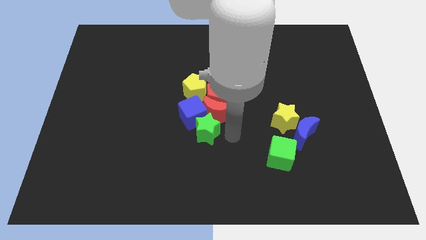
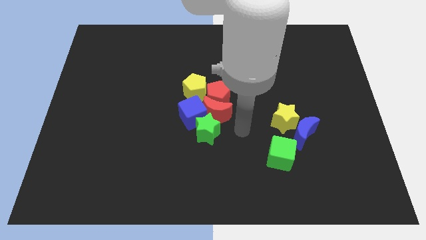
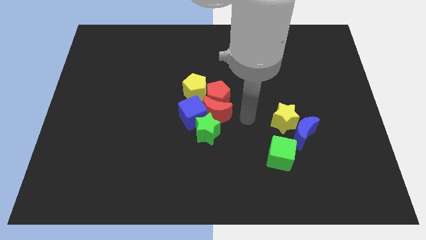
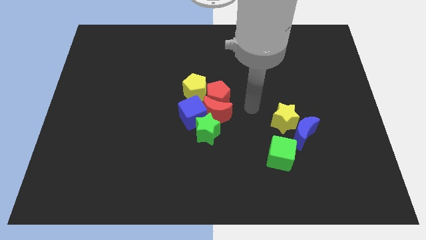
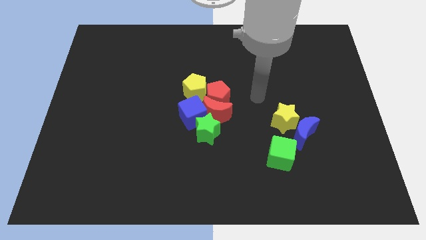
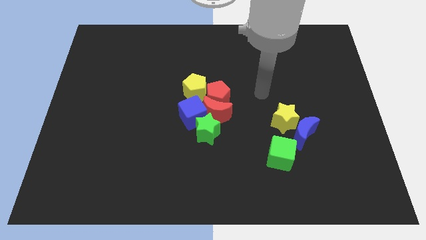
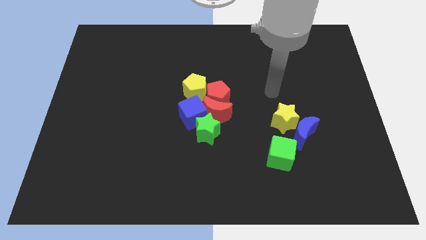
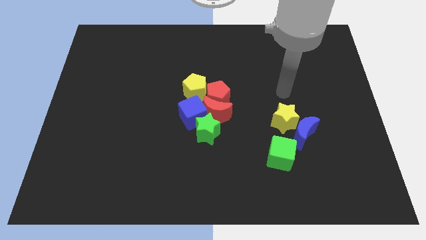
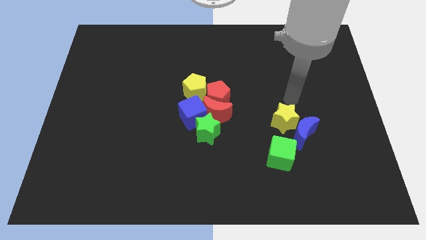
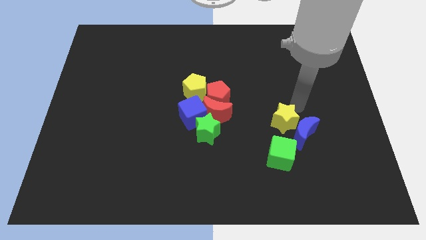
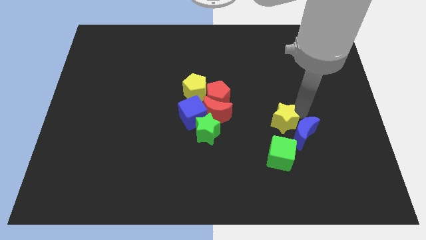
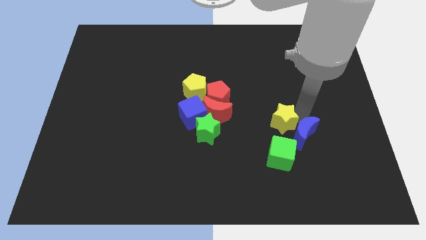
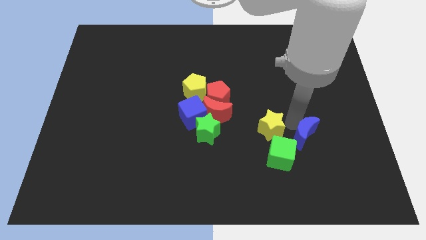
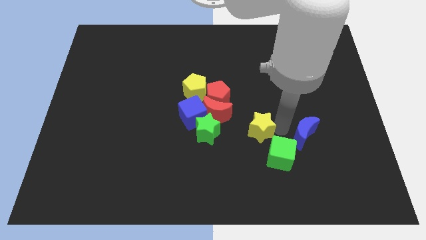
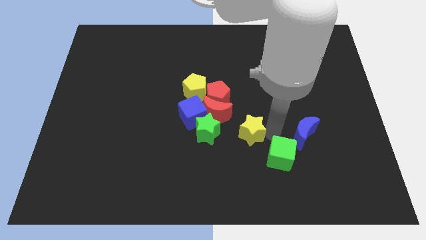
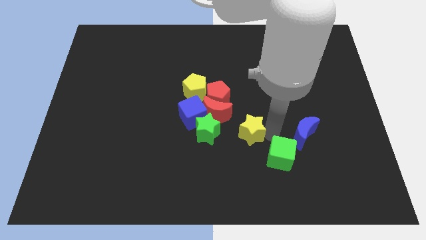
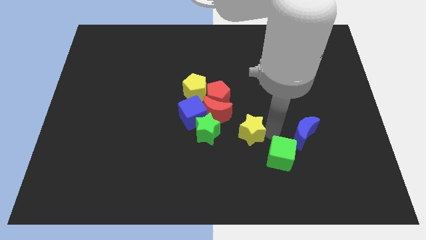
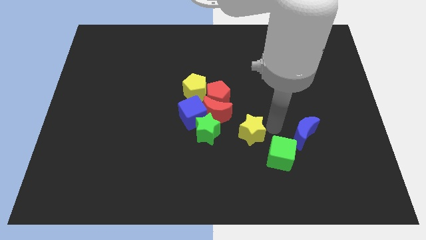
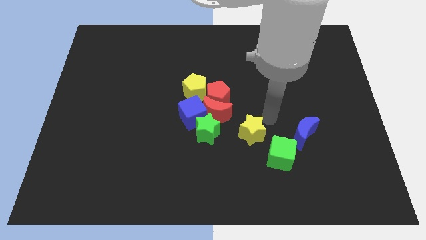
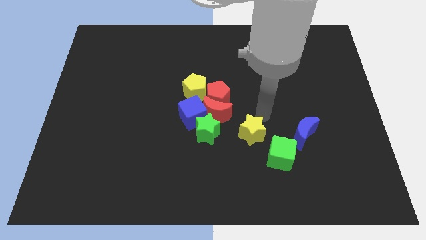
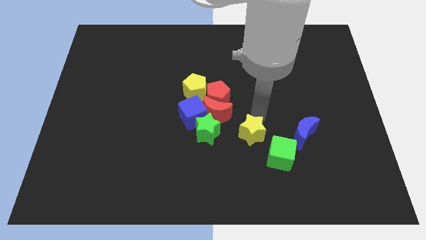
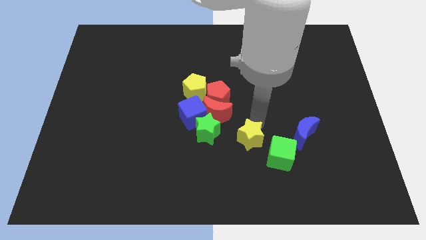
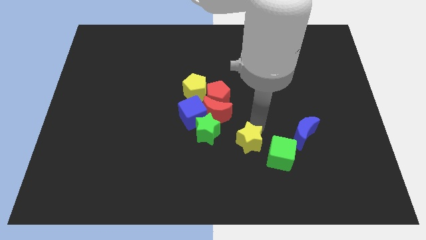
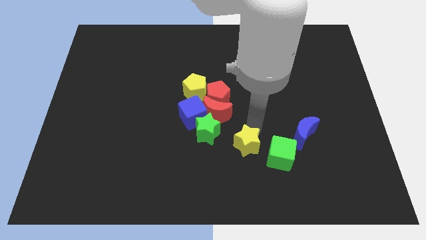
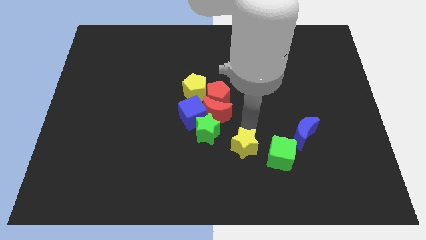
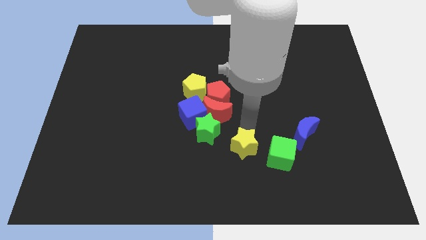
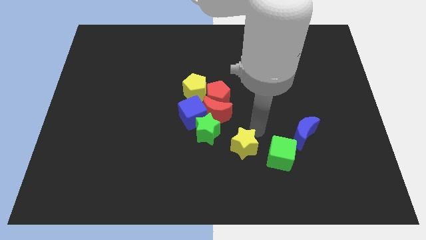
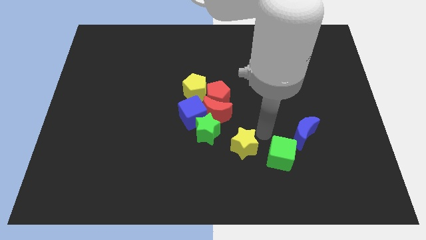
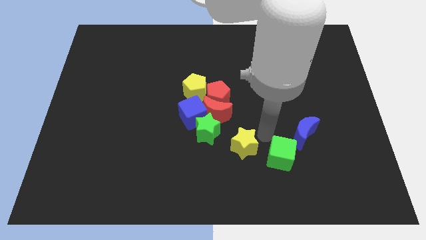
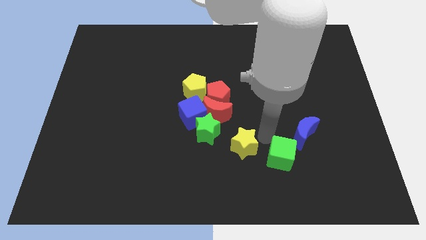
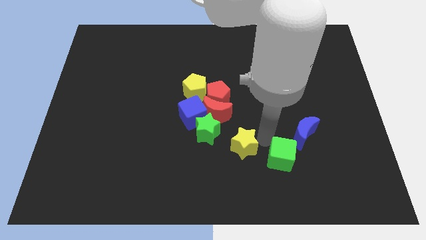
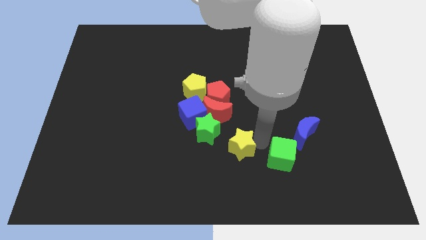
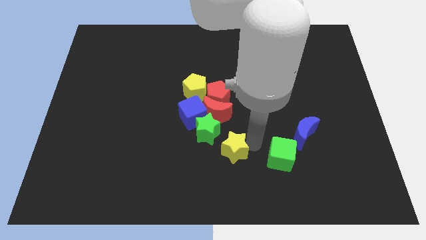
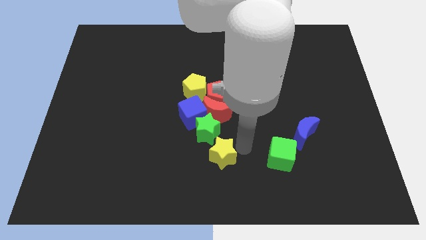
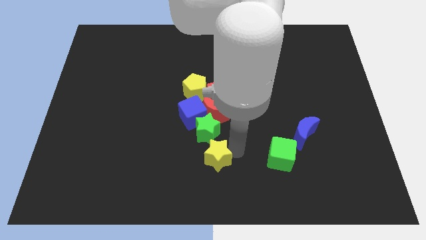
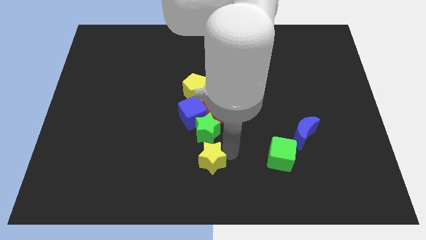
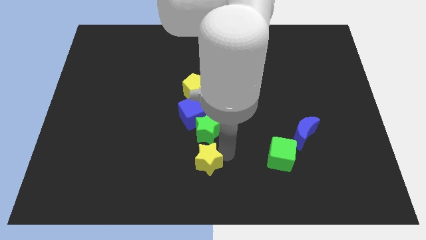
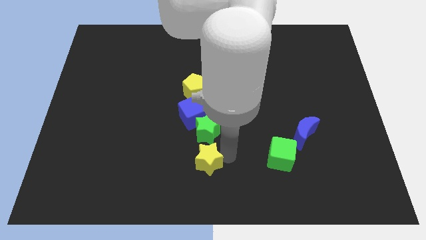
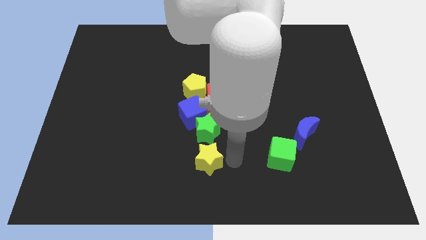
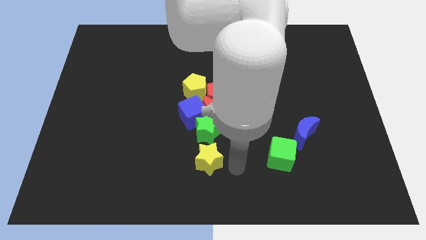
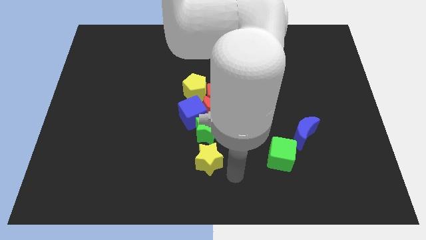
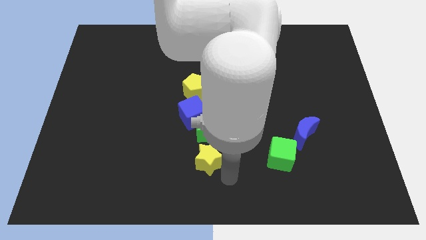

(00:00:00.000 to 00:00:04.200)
place the yellow star below the green star

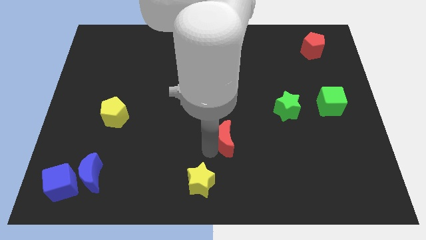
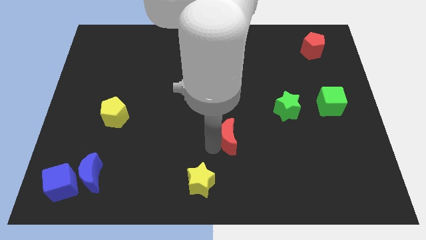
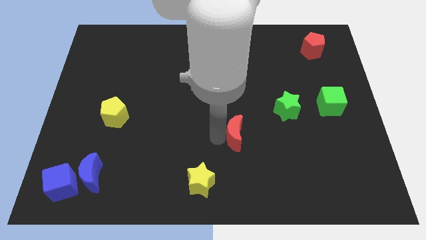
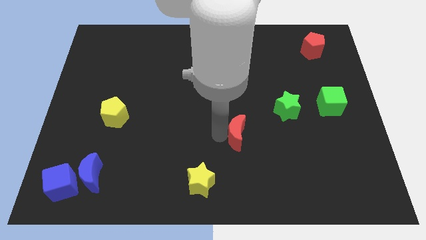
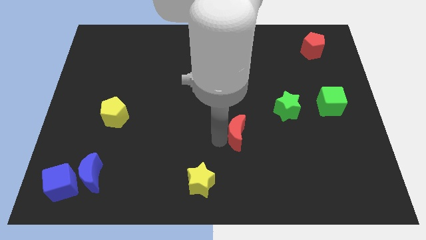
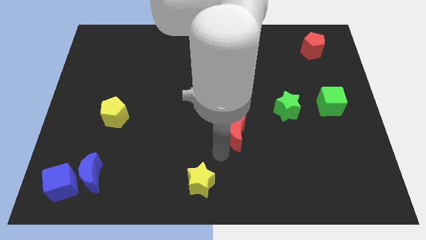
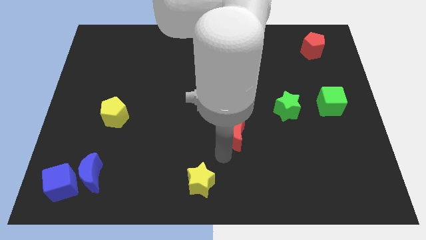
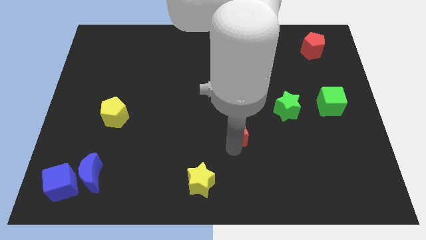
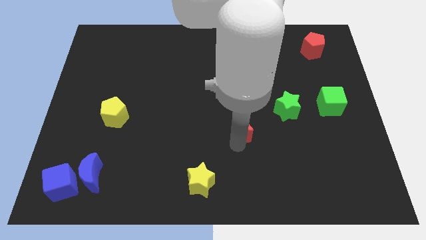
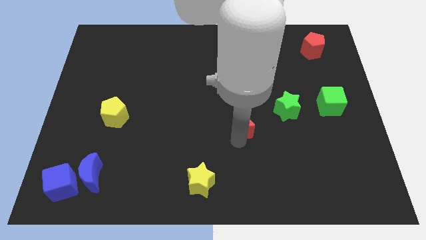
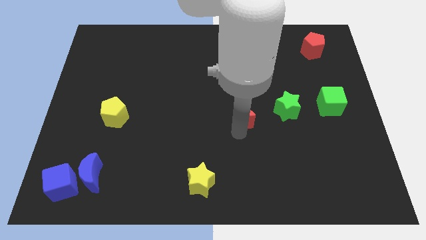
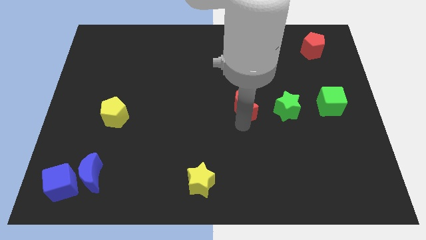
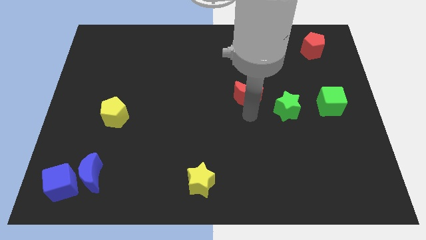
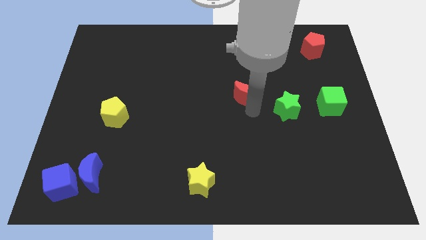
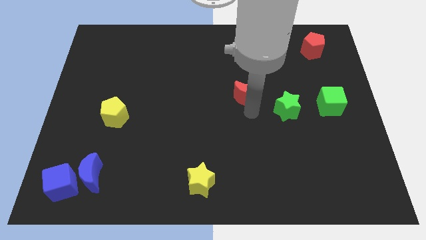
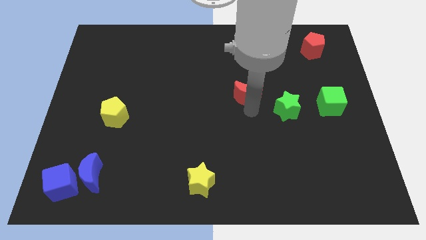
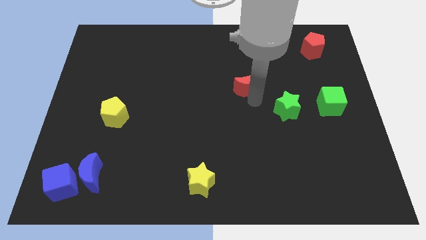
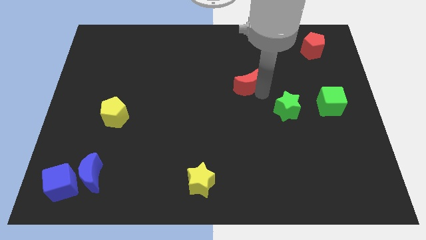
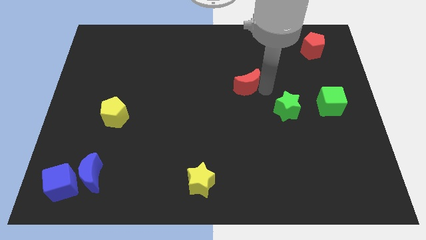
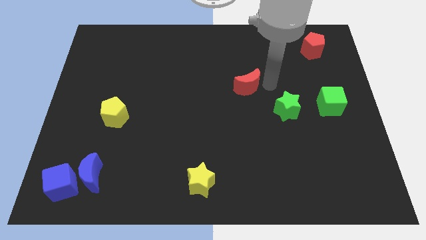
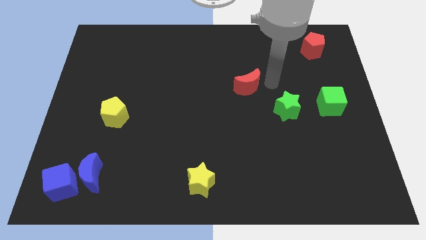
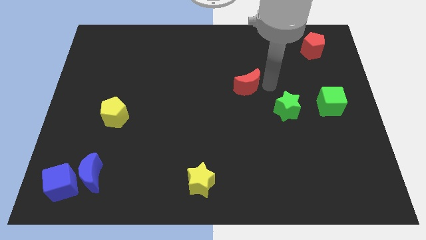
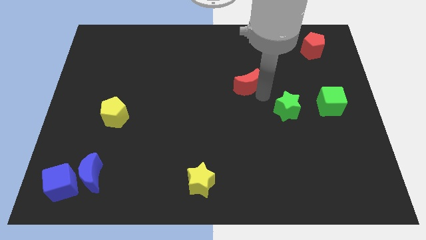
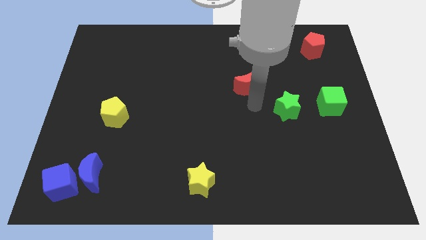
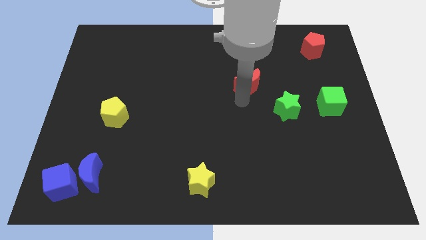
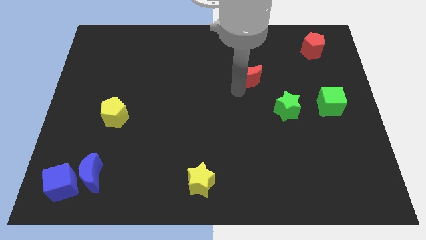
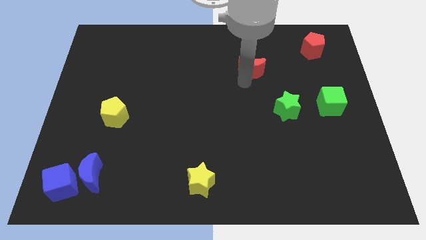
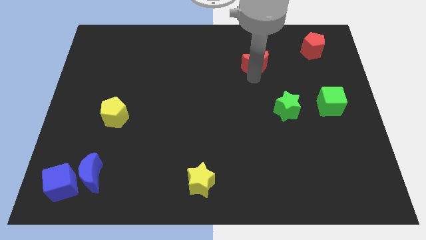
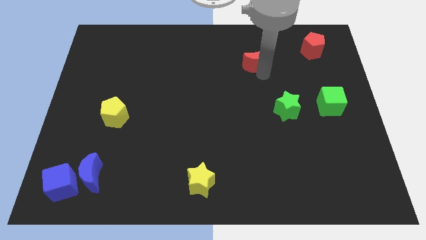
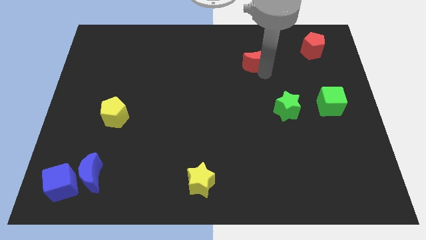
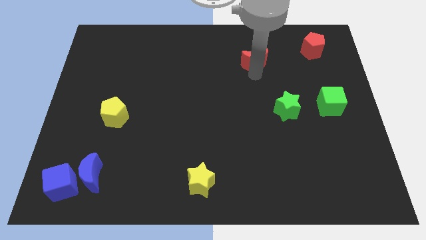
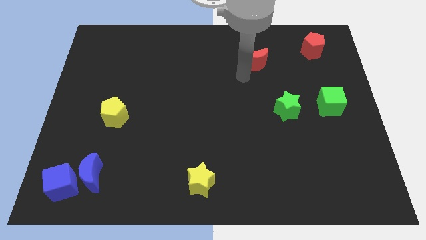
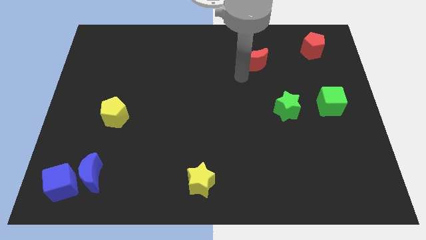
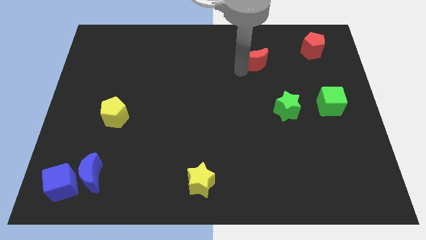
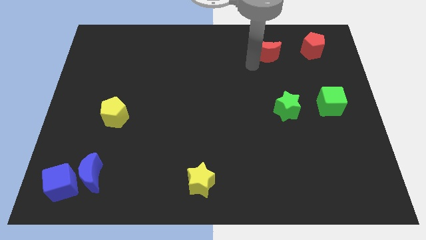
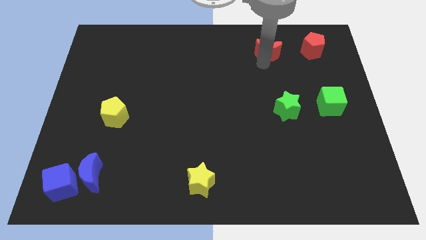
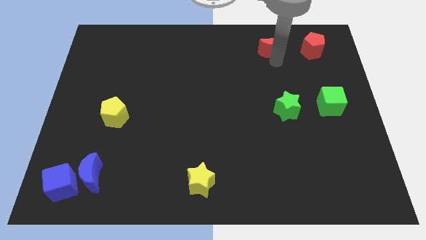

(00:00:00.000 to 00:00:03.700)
place the red moon to the left of the red pentagon

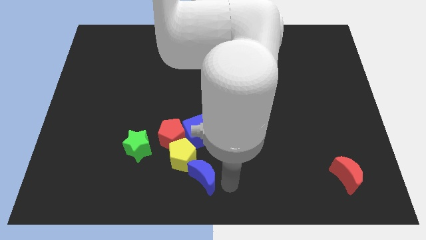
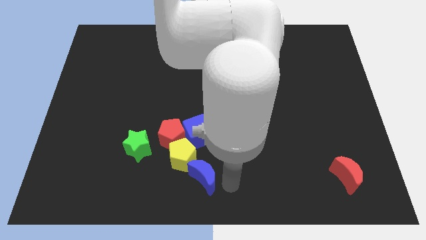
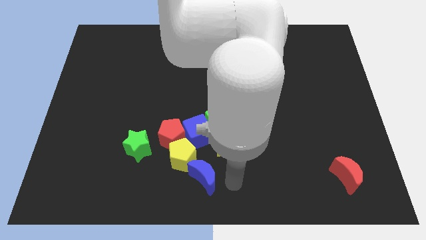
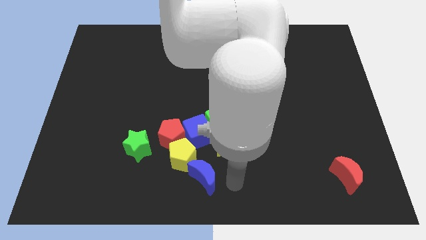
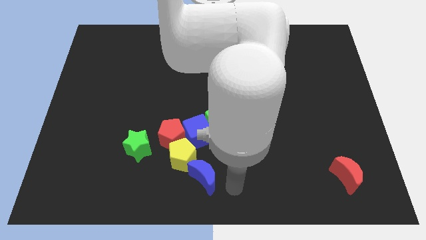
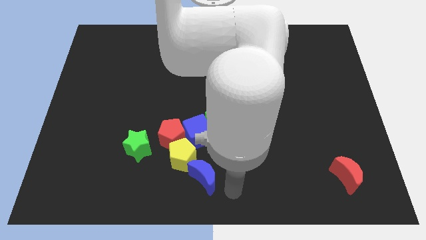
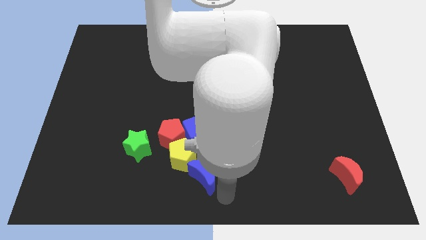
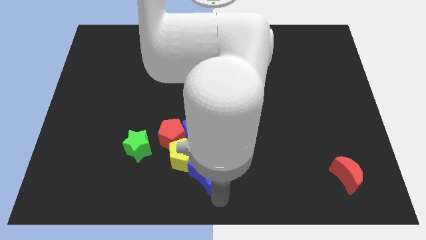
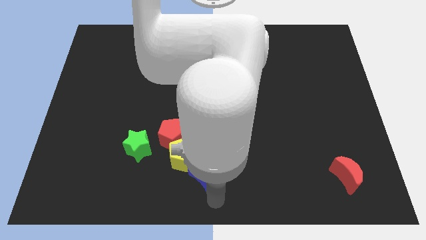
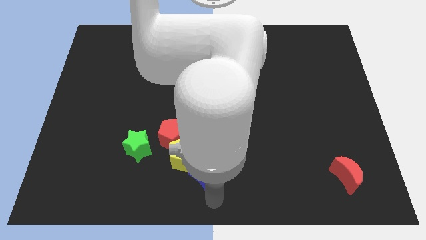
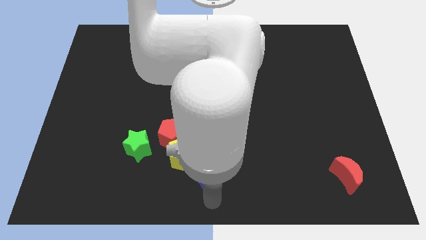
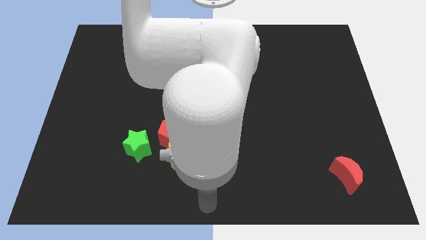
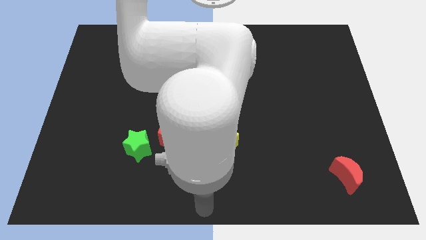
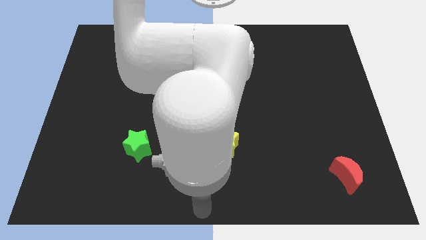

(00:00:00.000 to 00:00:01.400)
move your arm to the bottom center of the board
